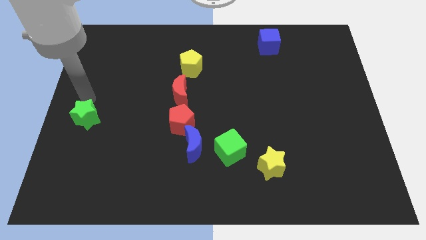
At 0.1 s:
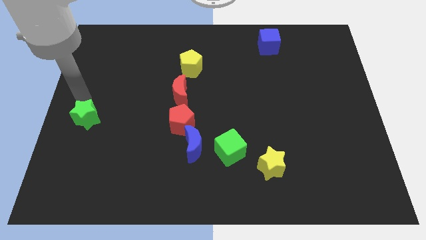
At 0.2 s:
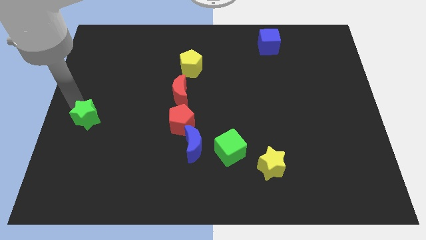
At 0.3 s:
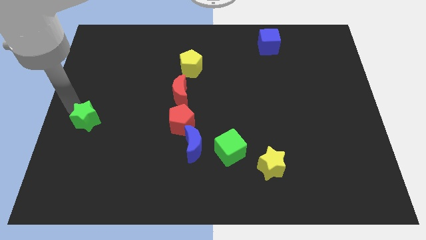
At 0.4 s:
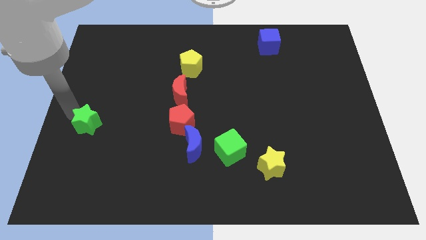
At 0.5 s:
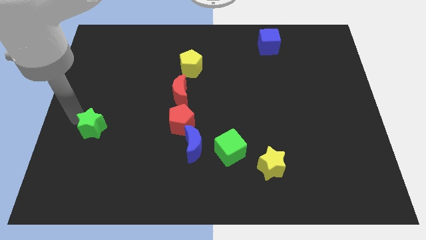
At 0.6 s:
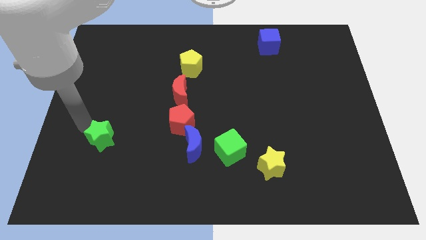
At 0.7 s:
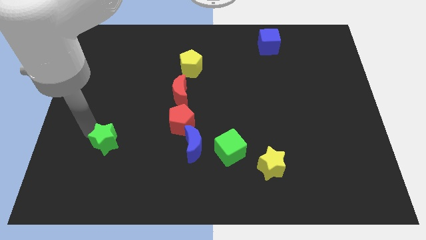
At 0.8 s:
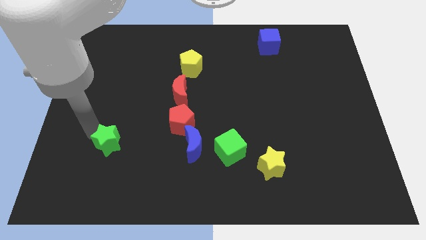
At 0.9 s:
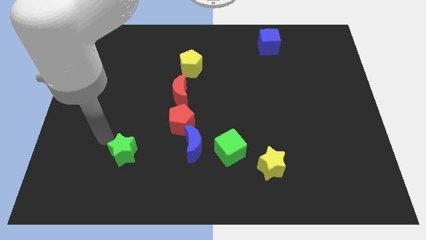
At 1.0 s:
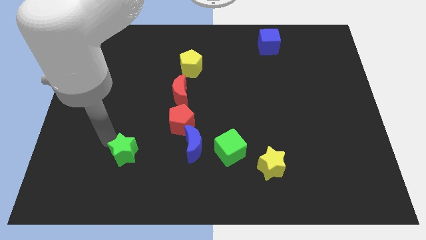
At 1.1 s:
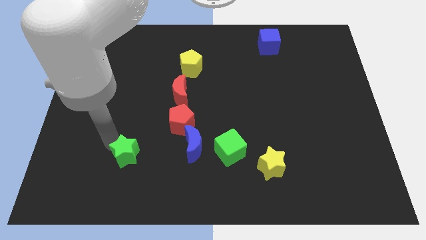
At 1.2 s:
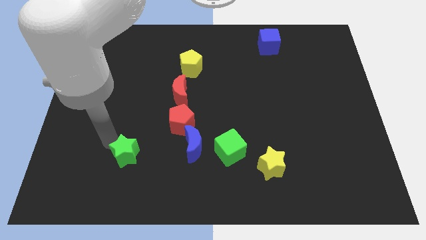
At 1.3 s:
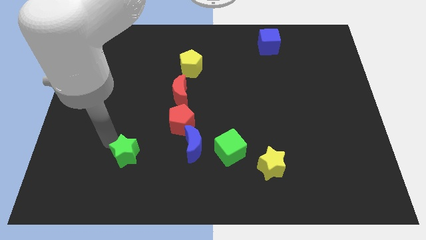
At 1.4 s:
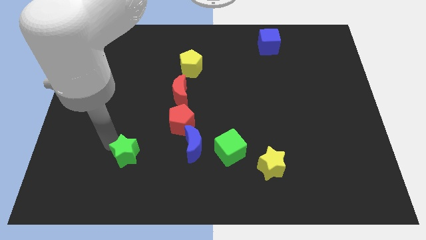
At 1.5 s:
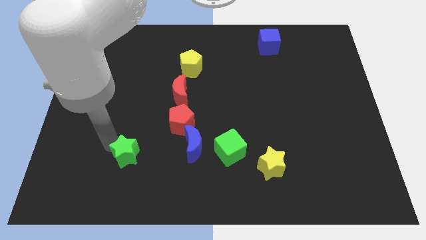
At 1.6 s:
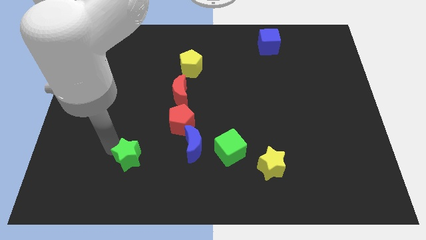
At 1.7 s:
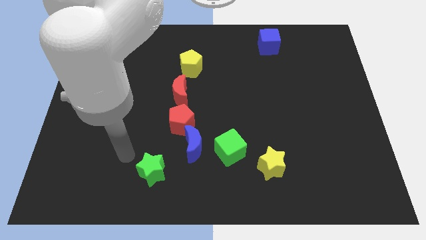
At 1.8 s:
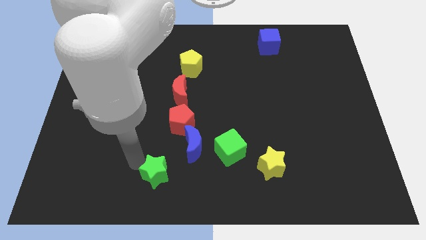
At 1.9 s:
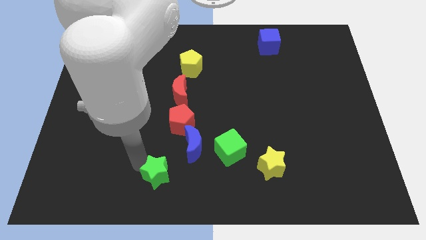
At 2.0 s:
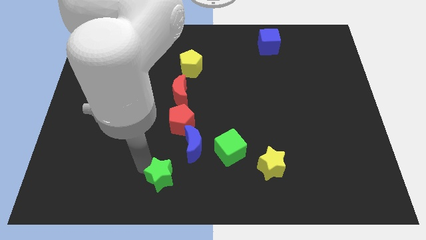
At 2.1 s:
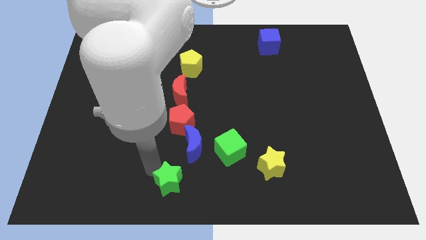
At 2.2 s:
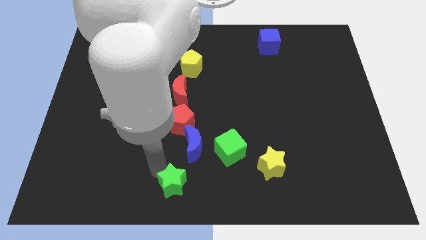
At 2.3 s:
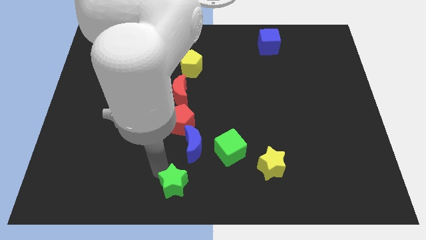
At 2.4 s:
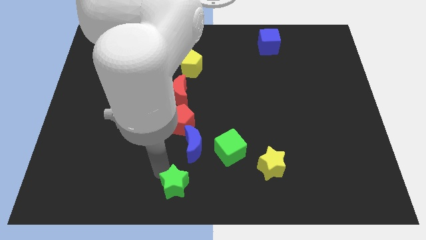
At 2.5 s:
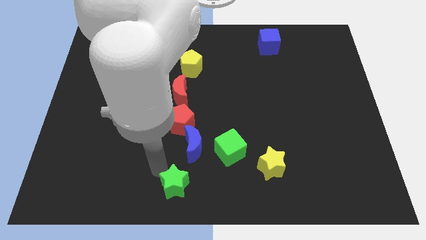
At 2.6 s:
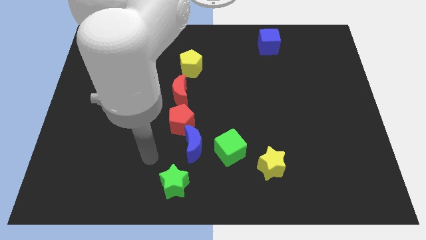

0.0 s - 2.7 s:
place green star to the bottom of red pentagon

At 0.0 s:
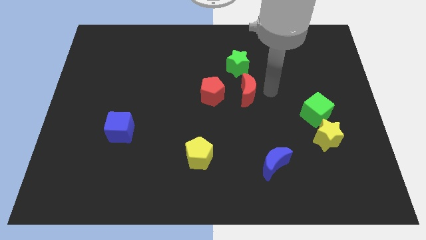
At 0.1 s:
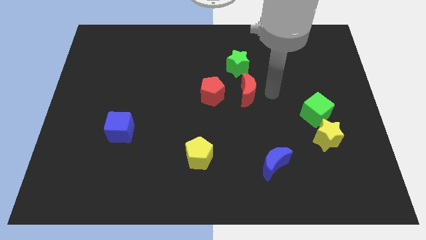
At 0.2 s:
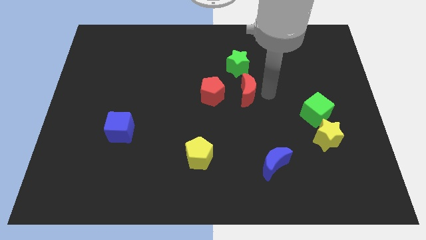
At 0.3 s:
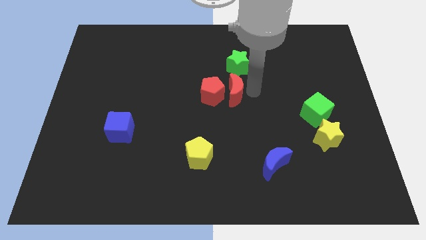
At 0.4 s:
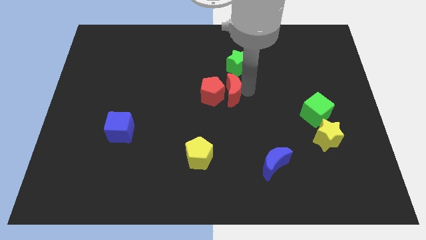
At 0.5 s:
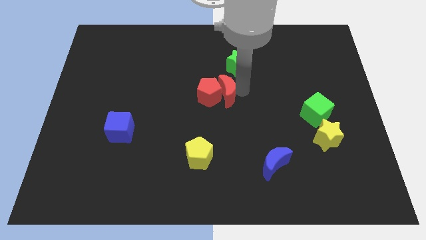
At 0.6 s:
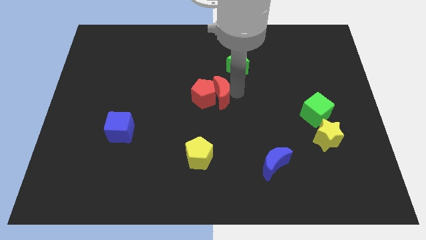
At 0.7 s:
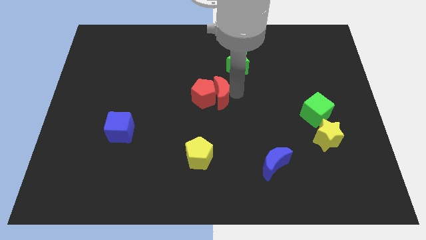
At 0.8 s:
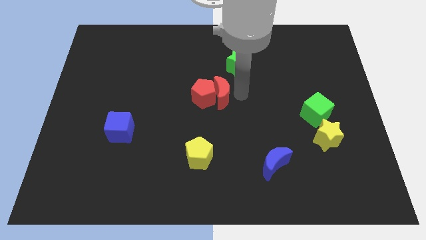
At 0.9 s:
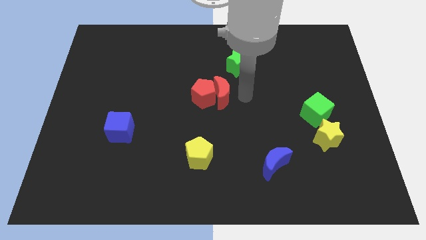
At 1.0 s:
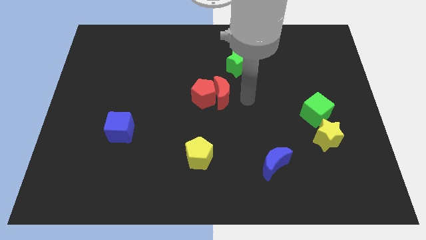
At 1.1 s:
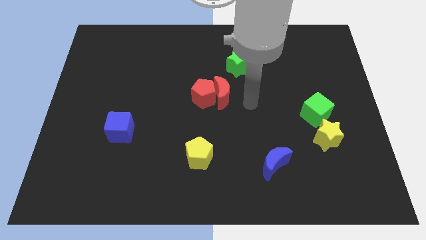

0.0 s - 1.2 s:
push red crescent towards red pentagon

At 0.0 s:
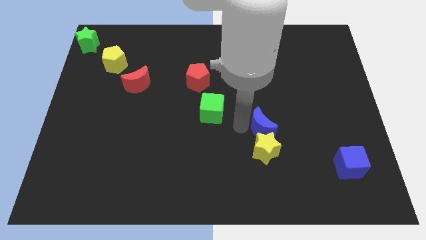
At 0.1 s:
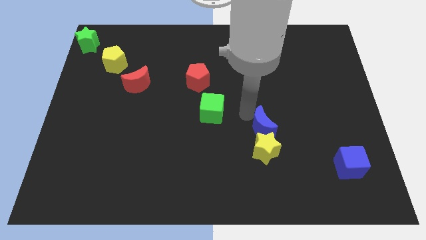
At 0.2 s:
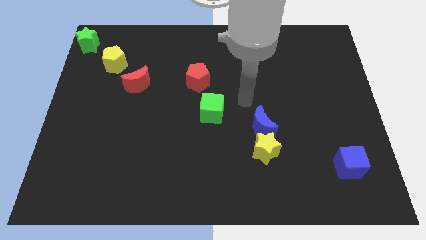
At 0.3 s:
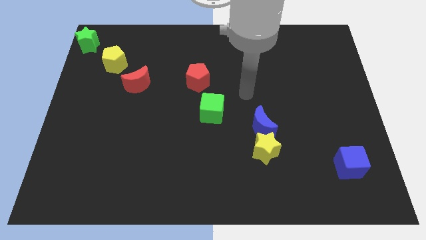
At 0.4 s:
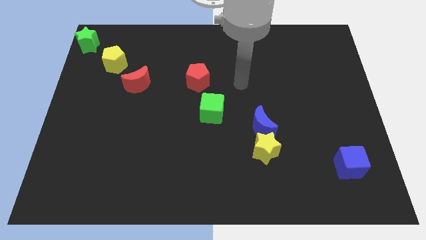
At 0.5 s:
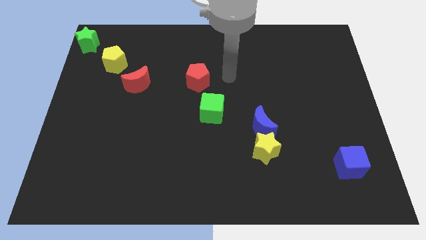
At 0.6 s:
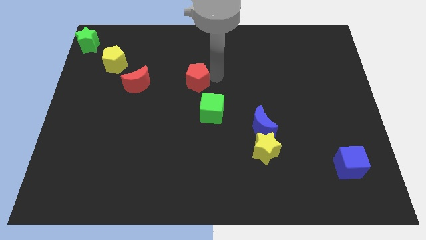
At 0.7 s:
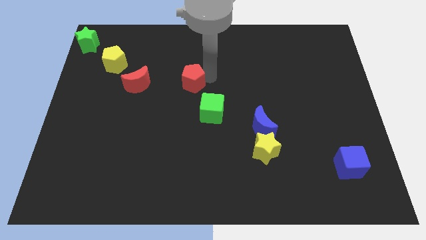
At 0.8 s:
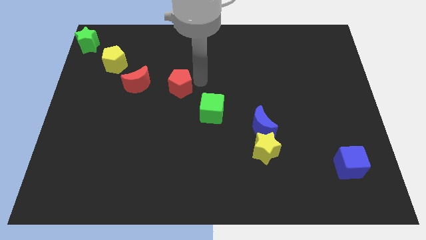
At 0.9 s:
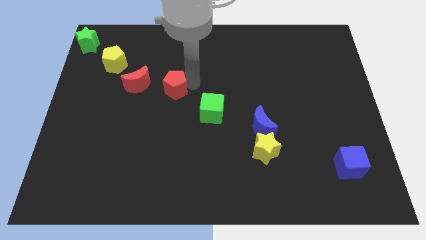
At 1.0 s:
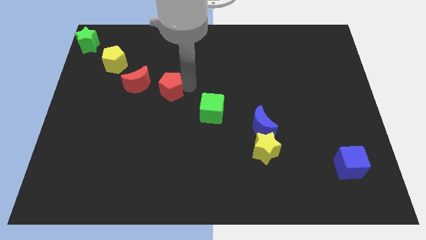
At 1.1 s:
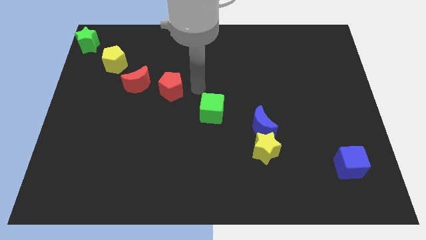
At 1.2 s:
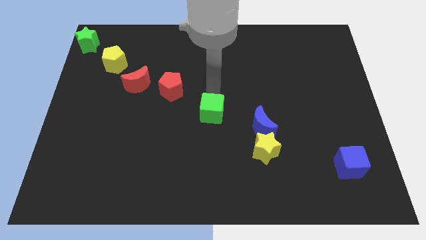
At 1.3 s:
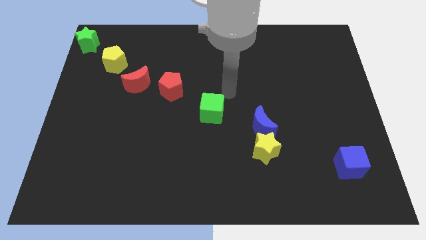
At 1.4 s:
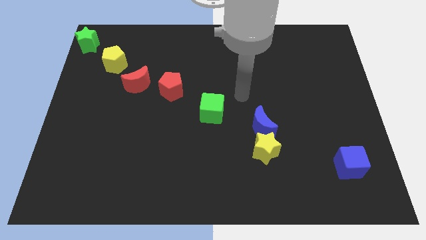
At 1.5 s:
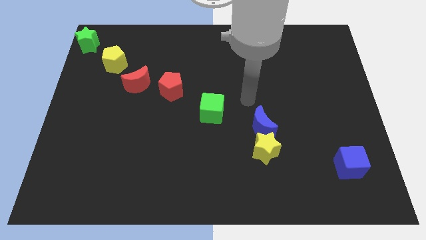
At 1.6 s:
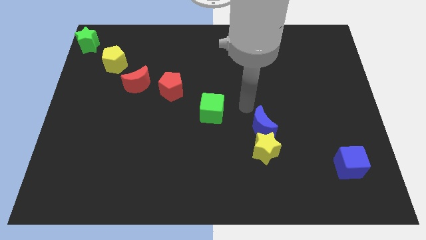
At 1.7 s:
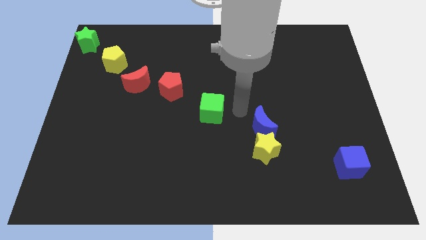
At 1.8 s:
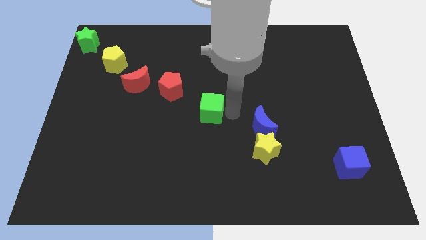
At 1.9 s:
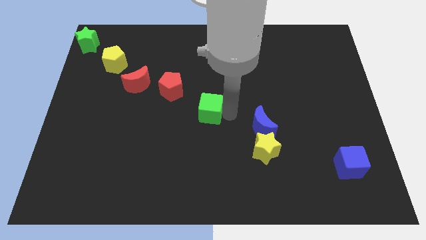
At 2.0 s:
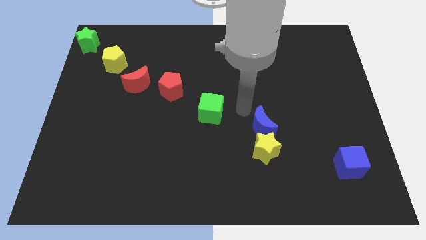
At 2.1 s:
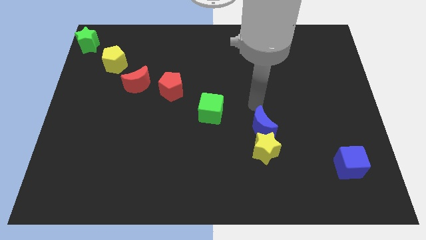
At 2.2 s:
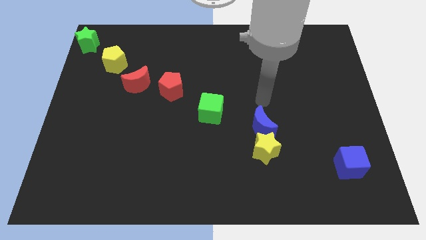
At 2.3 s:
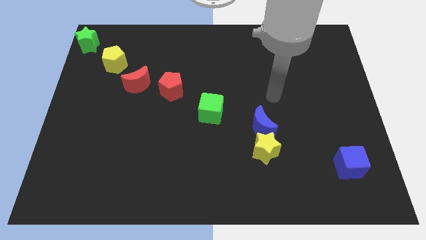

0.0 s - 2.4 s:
place red pentagon and green cube in a diagonal line

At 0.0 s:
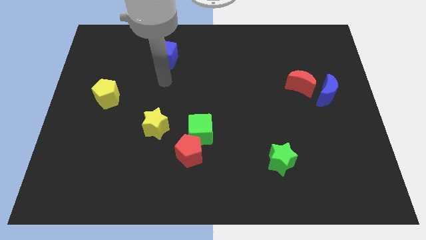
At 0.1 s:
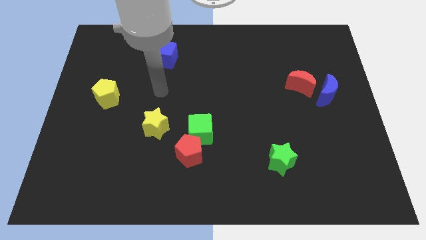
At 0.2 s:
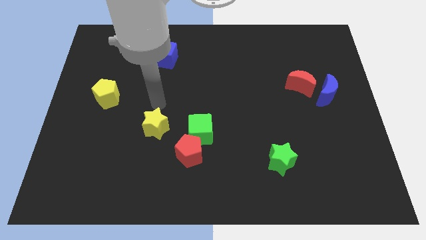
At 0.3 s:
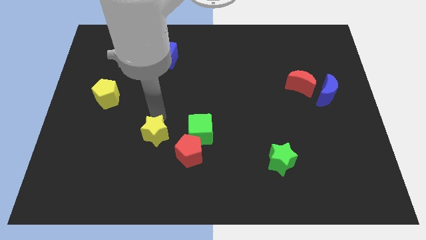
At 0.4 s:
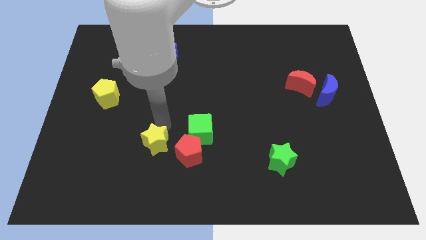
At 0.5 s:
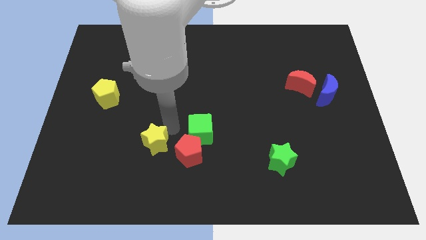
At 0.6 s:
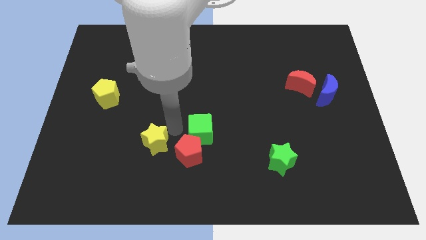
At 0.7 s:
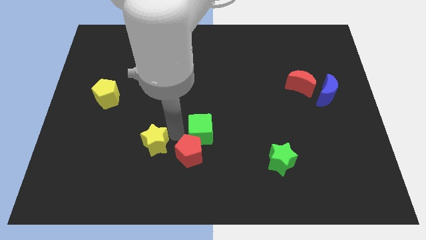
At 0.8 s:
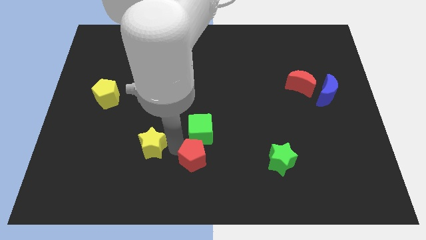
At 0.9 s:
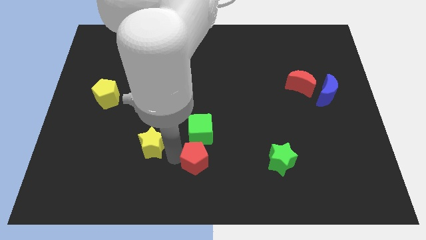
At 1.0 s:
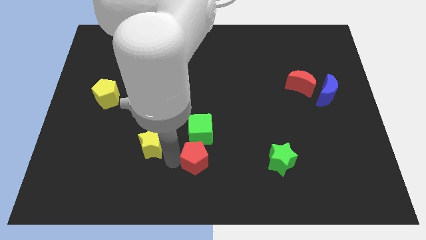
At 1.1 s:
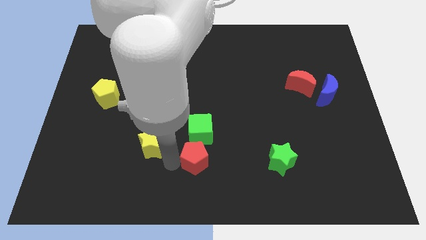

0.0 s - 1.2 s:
move your arm close to the red pentagon

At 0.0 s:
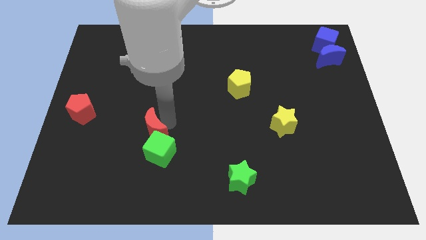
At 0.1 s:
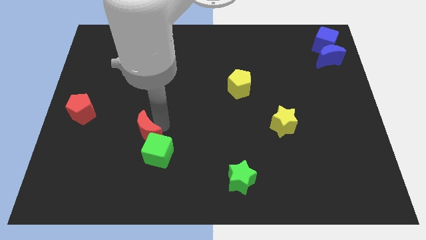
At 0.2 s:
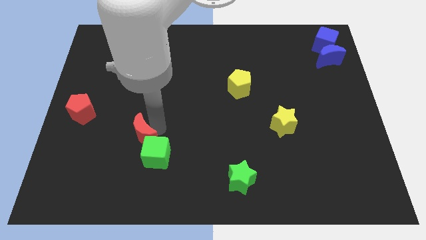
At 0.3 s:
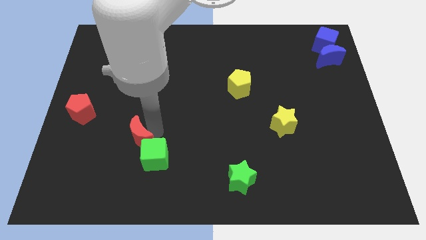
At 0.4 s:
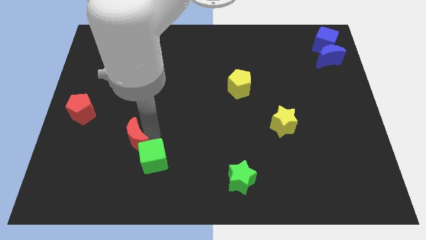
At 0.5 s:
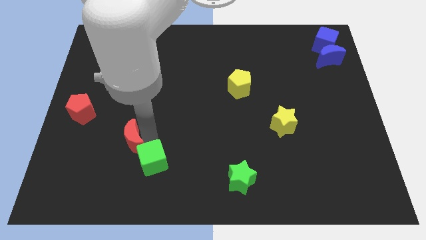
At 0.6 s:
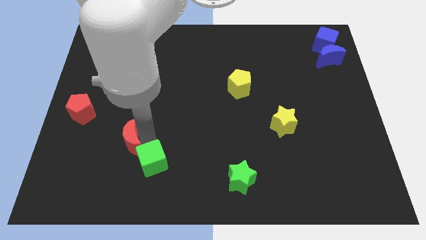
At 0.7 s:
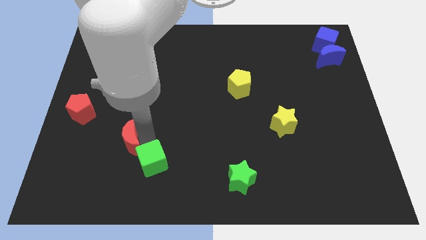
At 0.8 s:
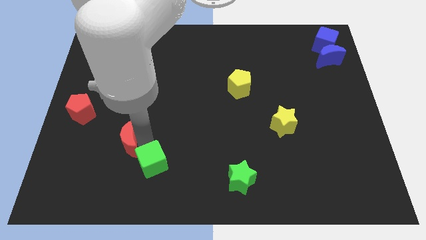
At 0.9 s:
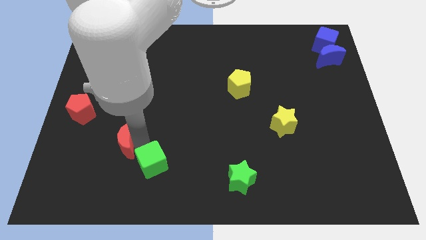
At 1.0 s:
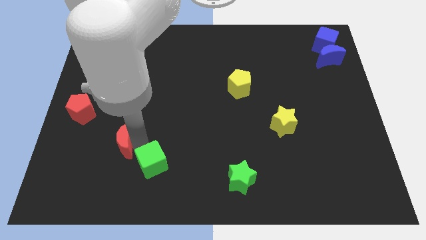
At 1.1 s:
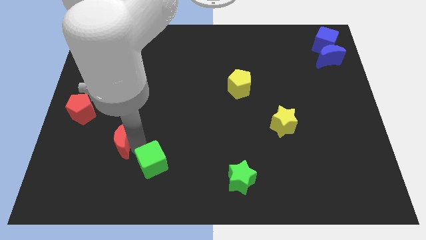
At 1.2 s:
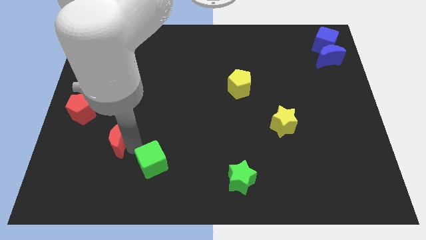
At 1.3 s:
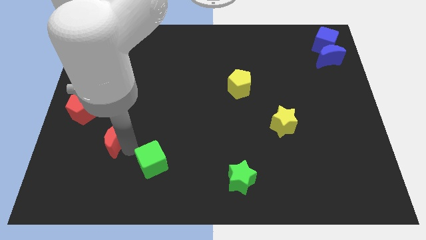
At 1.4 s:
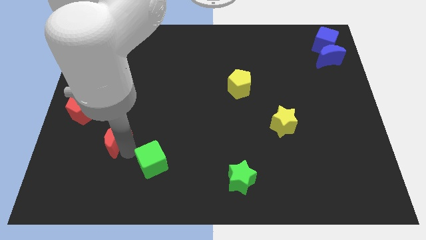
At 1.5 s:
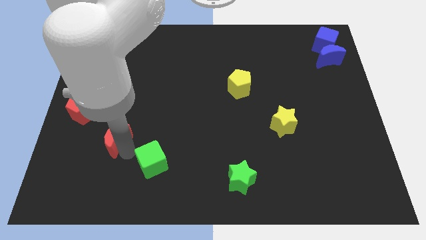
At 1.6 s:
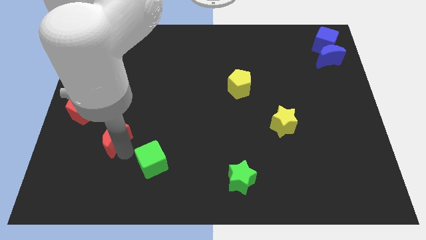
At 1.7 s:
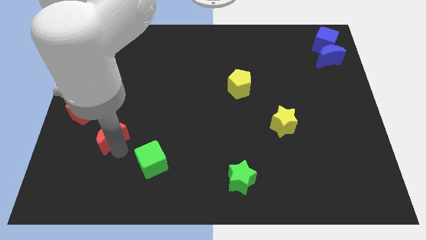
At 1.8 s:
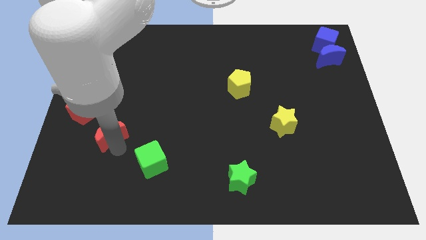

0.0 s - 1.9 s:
put the red moon between the red pentagon and green cube
